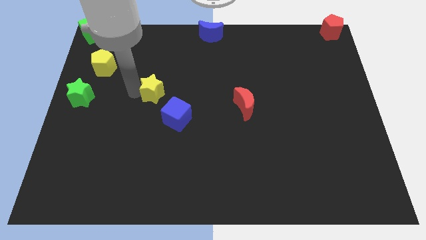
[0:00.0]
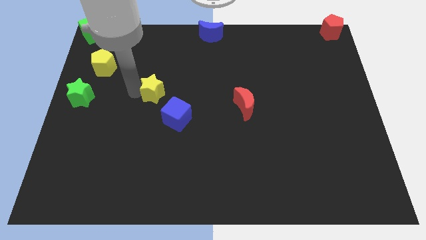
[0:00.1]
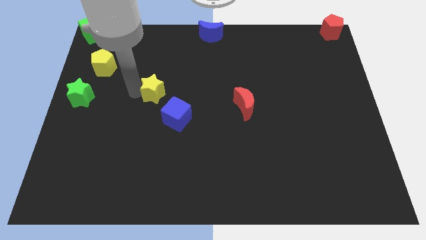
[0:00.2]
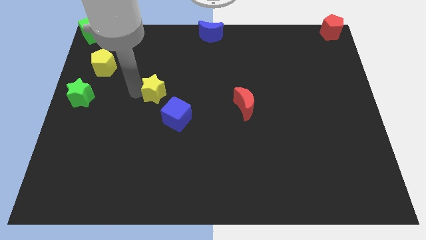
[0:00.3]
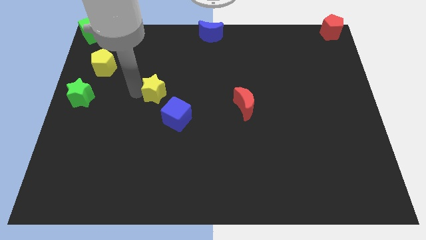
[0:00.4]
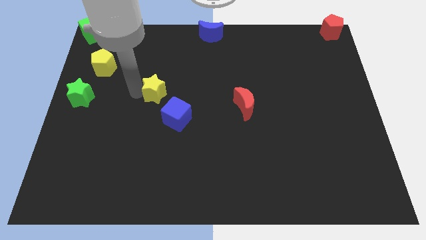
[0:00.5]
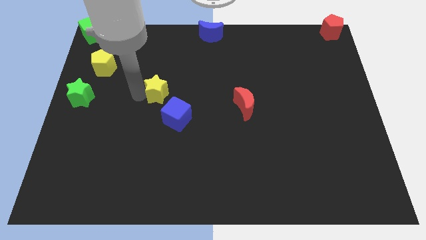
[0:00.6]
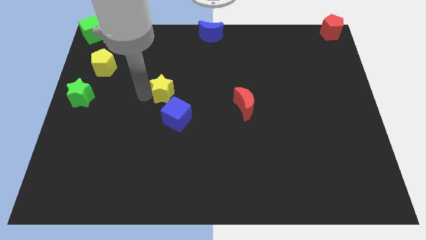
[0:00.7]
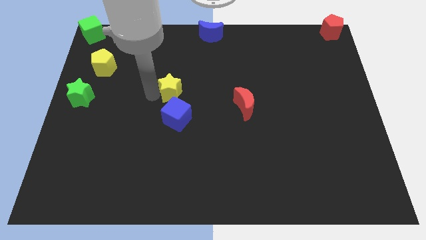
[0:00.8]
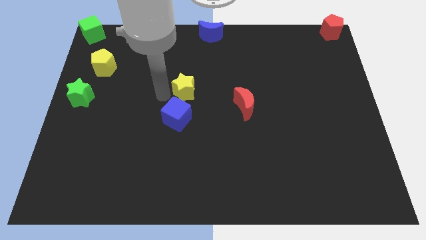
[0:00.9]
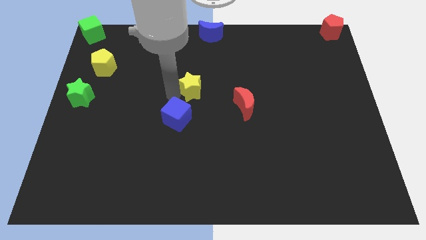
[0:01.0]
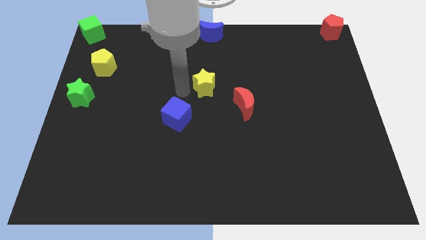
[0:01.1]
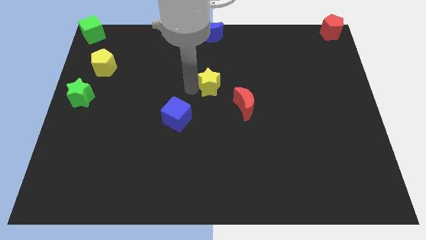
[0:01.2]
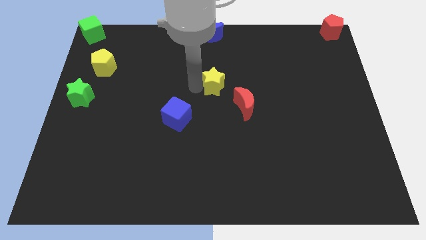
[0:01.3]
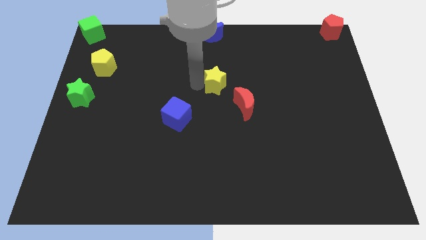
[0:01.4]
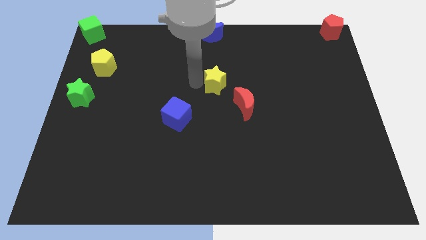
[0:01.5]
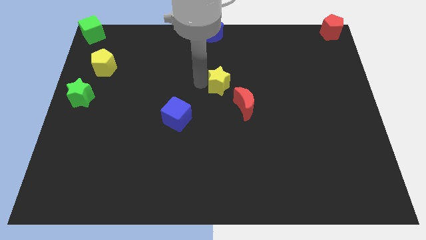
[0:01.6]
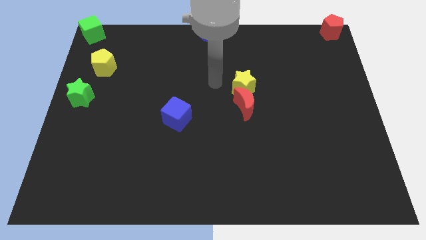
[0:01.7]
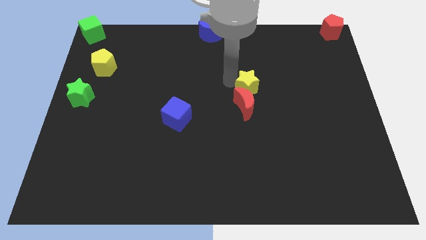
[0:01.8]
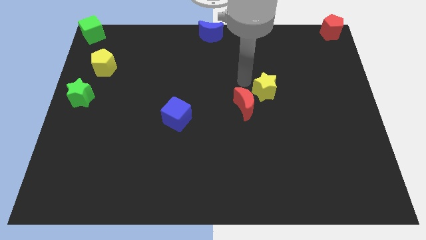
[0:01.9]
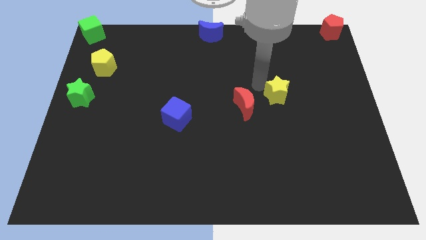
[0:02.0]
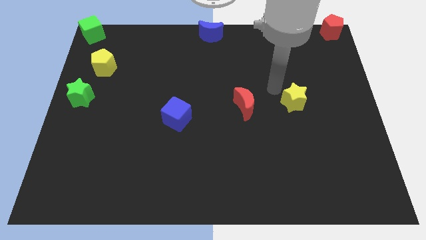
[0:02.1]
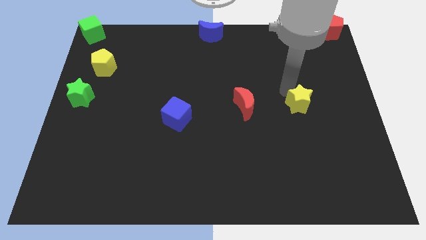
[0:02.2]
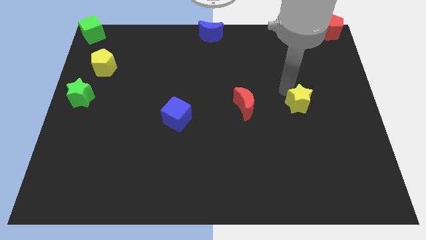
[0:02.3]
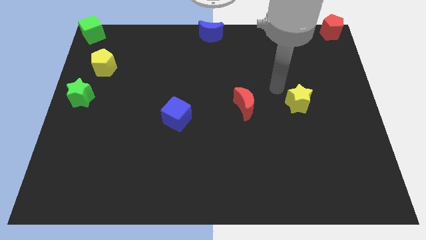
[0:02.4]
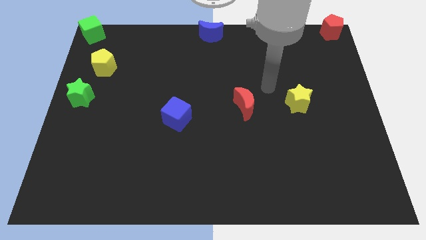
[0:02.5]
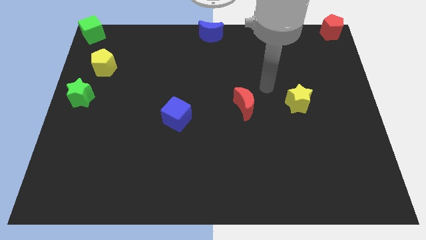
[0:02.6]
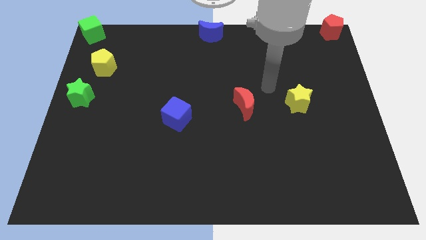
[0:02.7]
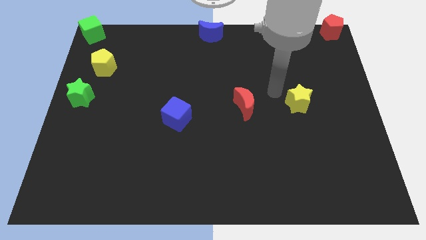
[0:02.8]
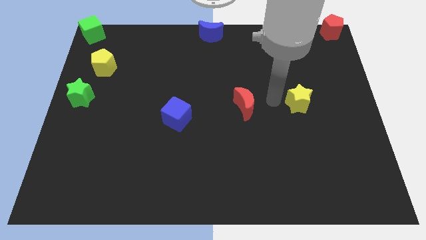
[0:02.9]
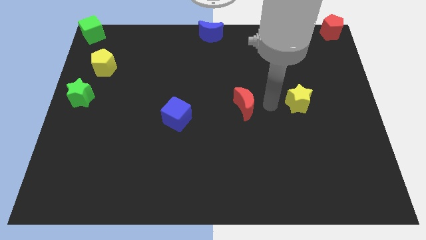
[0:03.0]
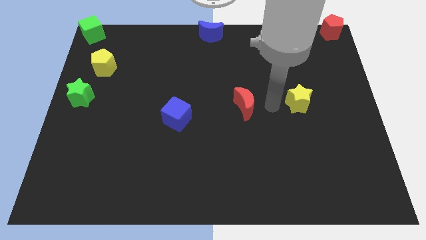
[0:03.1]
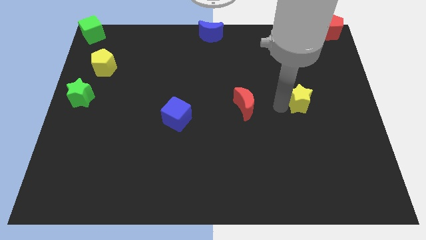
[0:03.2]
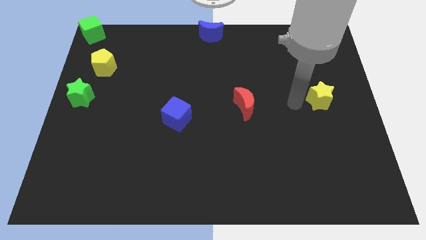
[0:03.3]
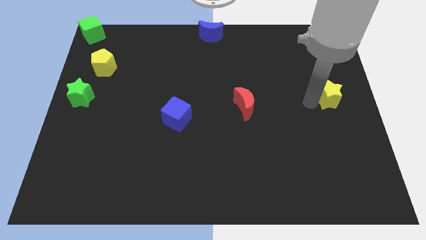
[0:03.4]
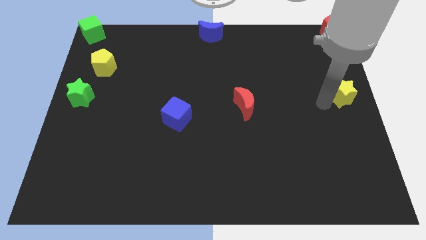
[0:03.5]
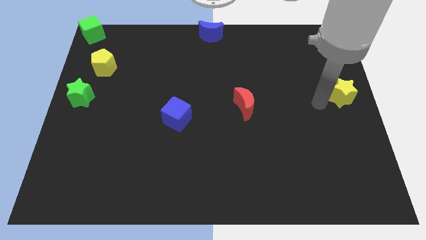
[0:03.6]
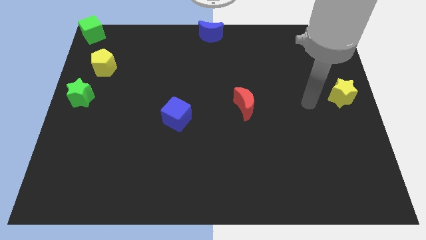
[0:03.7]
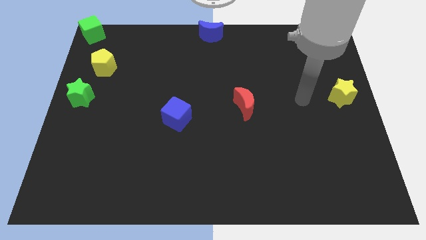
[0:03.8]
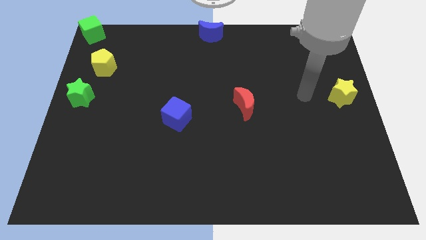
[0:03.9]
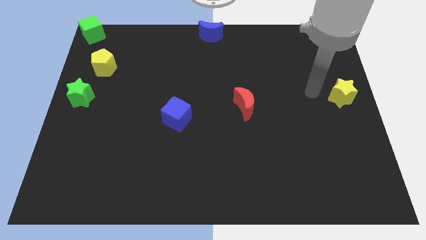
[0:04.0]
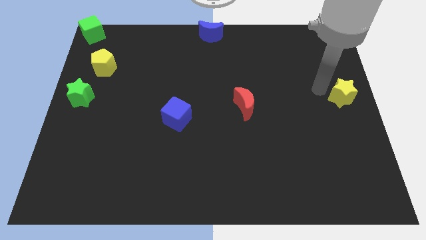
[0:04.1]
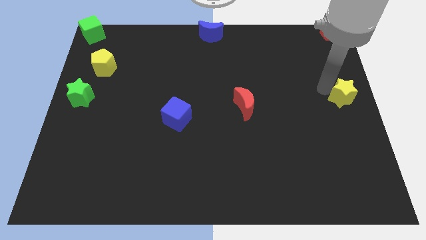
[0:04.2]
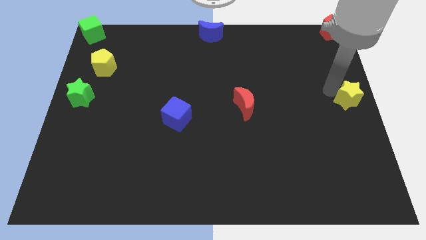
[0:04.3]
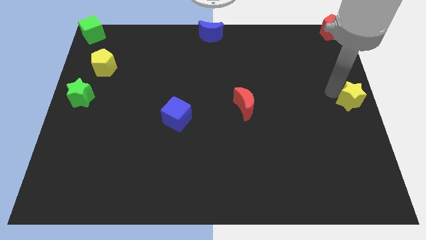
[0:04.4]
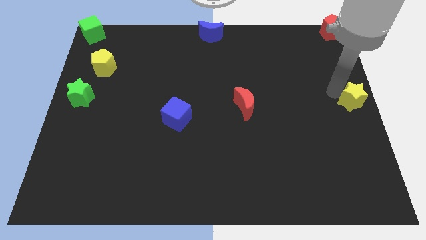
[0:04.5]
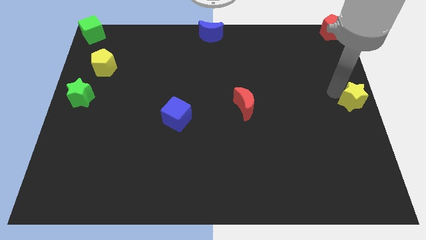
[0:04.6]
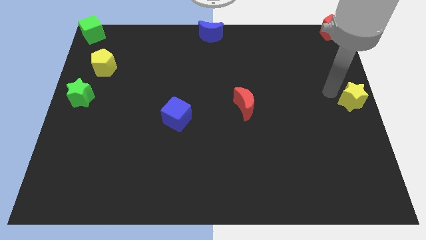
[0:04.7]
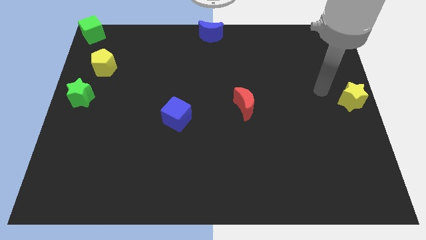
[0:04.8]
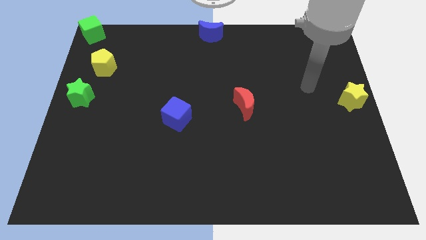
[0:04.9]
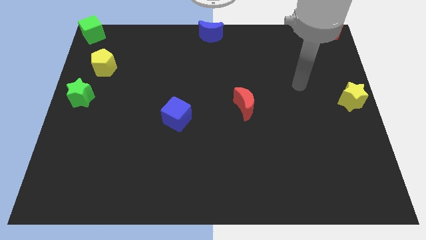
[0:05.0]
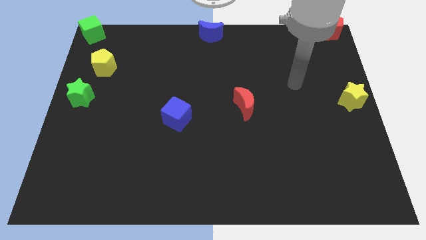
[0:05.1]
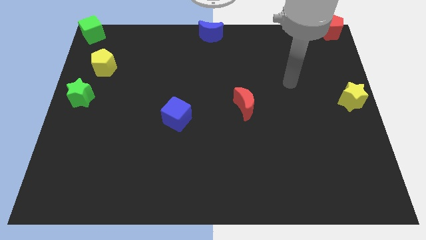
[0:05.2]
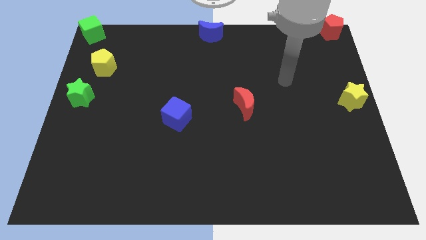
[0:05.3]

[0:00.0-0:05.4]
move the yellow star to the right center

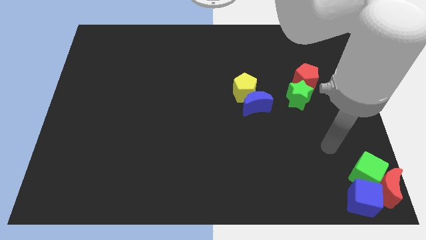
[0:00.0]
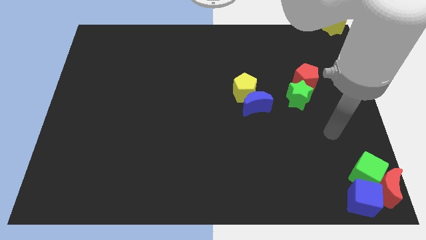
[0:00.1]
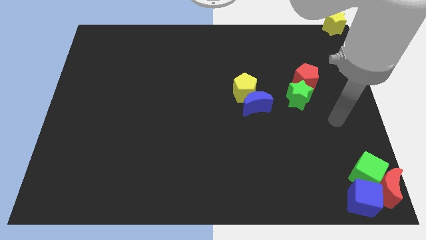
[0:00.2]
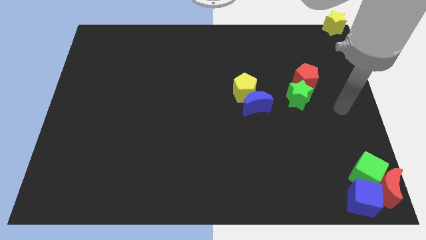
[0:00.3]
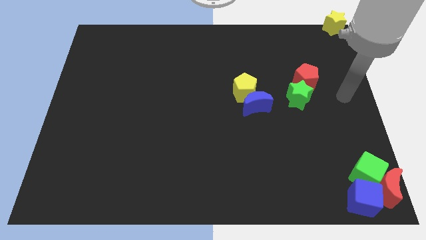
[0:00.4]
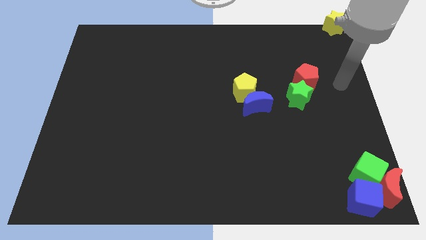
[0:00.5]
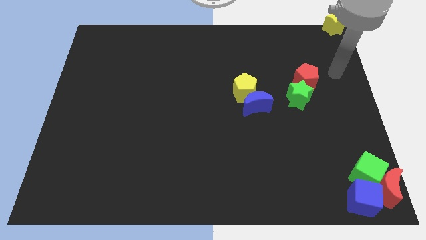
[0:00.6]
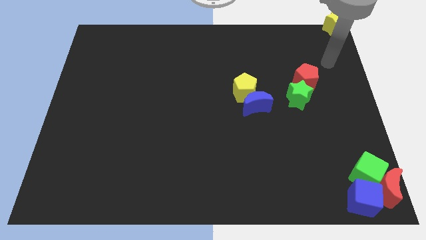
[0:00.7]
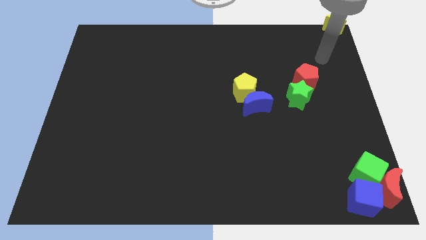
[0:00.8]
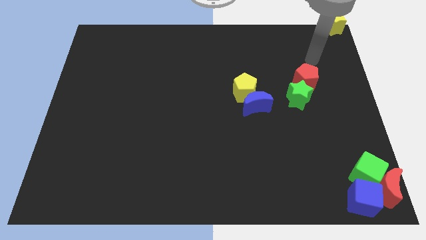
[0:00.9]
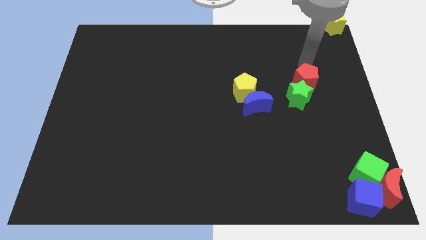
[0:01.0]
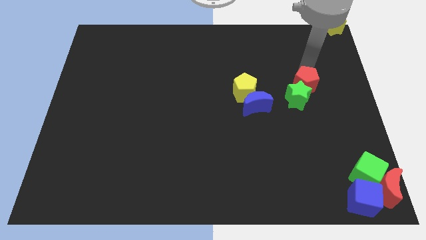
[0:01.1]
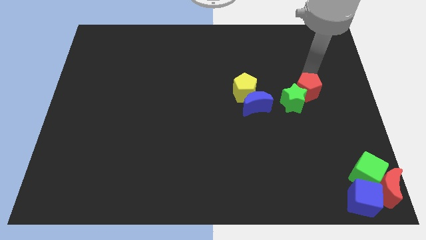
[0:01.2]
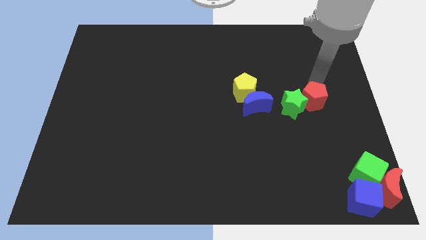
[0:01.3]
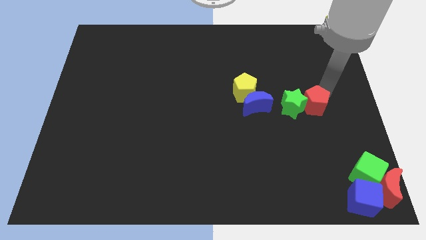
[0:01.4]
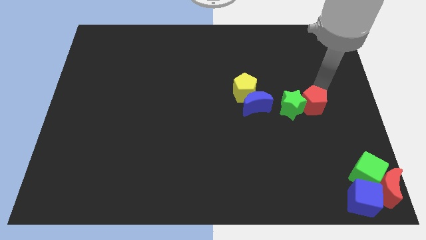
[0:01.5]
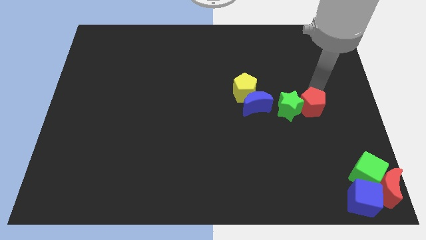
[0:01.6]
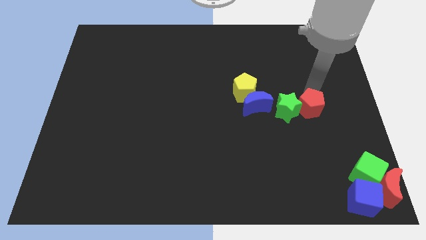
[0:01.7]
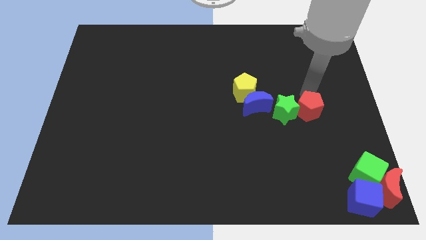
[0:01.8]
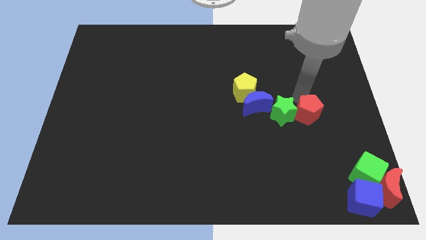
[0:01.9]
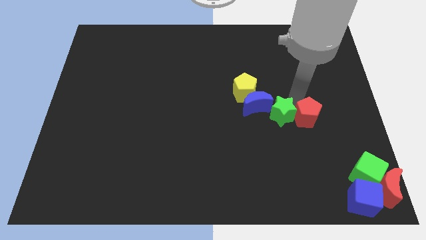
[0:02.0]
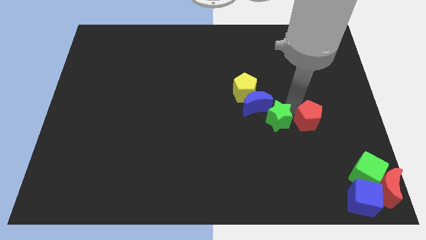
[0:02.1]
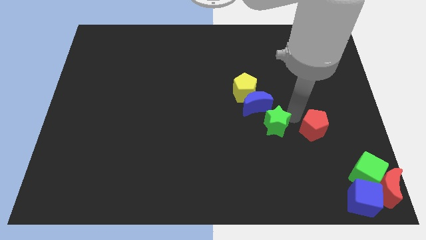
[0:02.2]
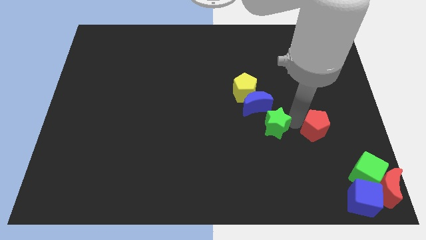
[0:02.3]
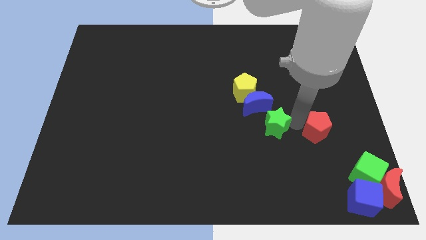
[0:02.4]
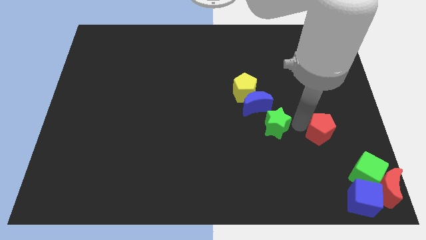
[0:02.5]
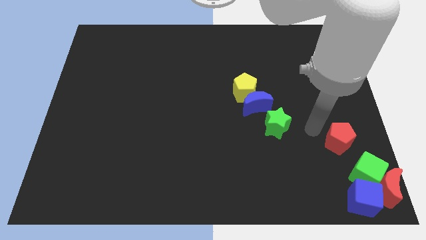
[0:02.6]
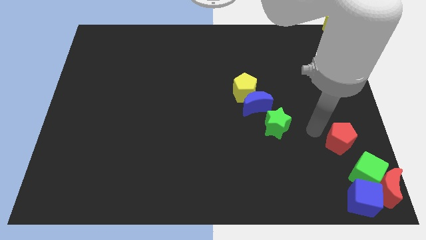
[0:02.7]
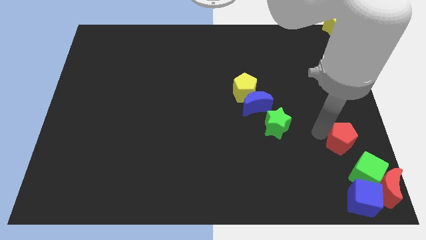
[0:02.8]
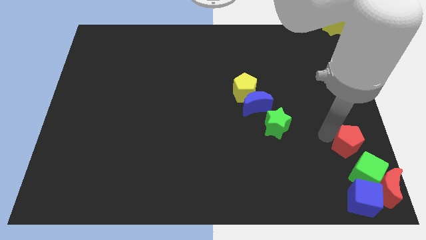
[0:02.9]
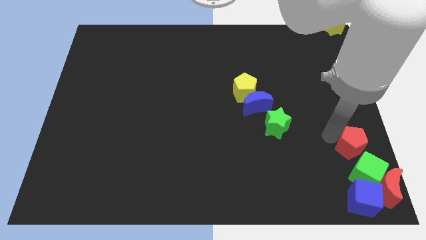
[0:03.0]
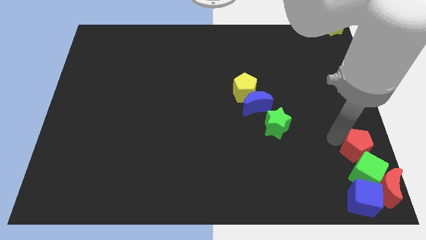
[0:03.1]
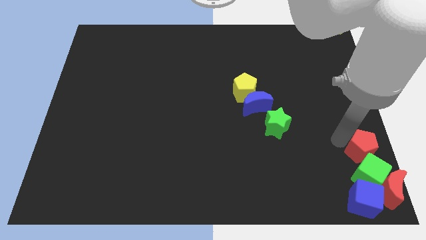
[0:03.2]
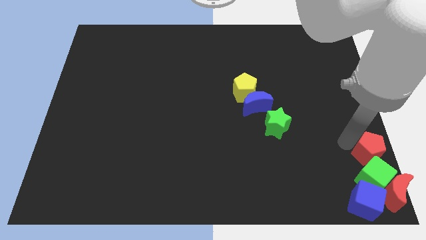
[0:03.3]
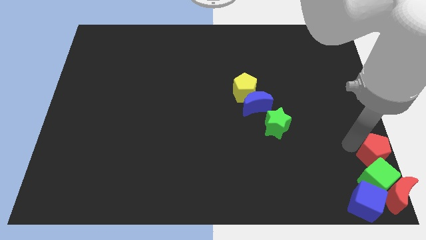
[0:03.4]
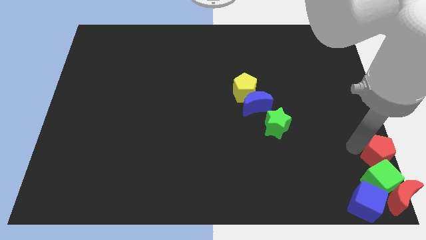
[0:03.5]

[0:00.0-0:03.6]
place red pentagon above green cube
